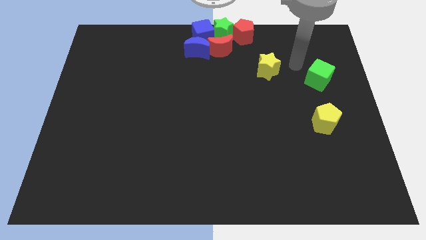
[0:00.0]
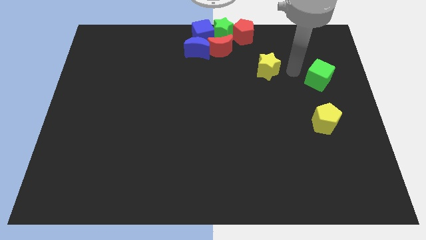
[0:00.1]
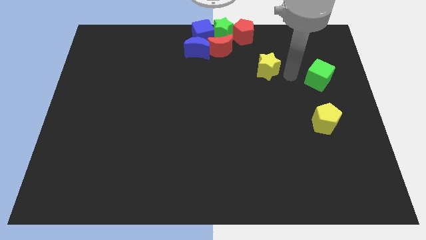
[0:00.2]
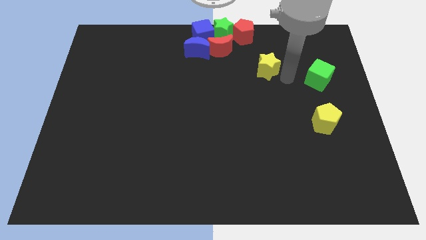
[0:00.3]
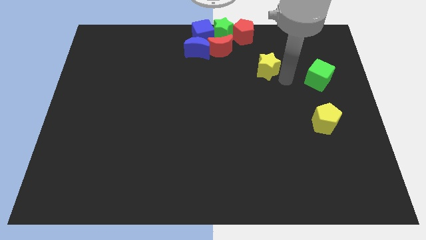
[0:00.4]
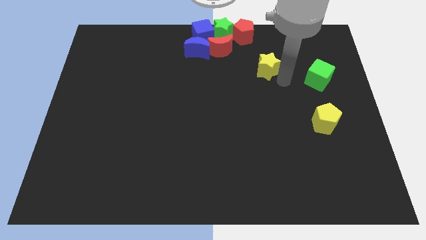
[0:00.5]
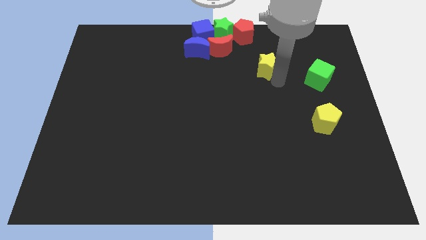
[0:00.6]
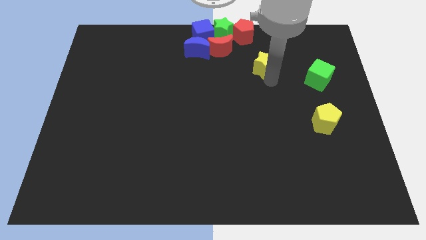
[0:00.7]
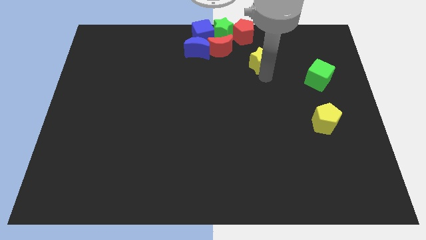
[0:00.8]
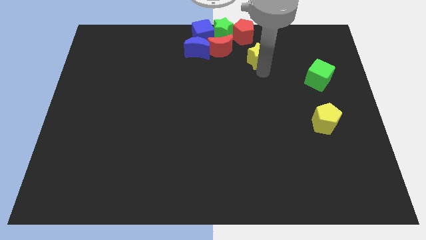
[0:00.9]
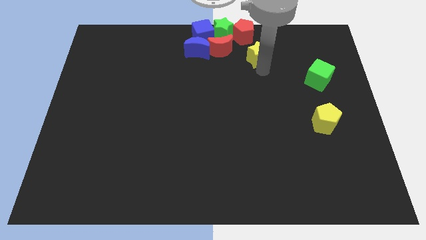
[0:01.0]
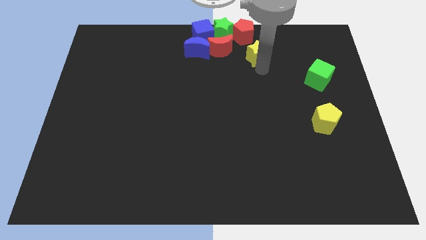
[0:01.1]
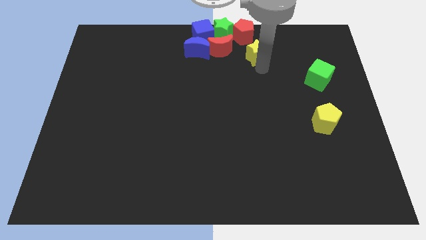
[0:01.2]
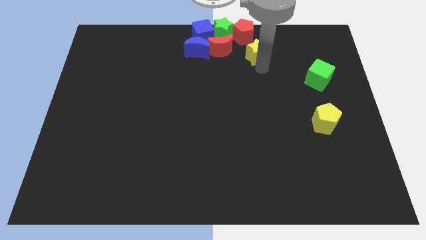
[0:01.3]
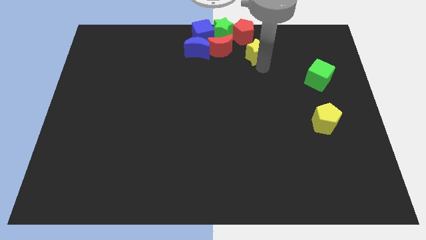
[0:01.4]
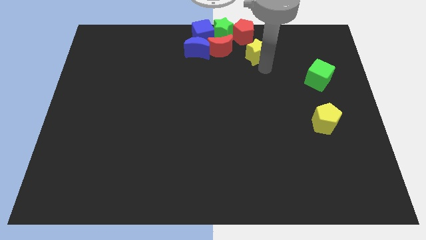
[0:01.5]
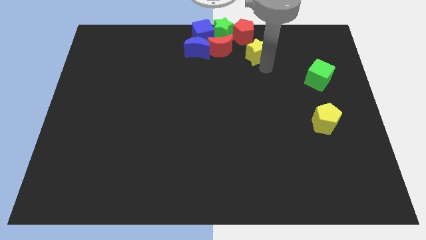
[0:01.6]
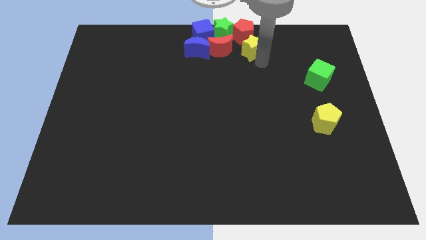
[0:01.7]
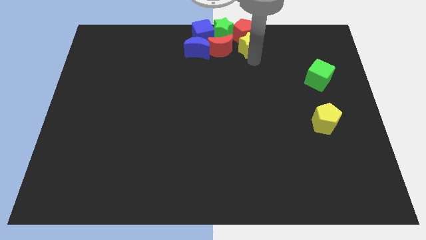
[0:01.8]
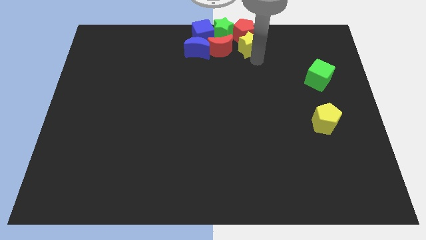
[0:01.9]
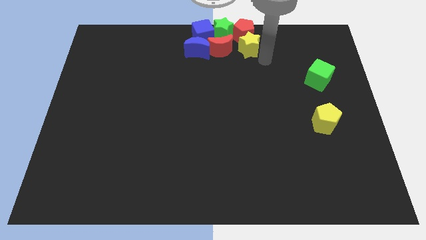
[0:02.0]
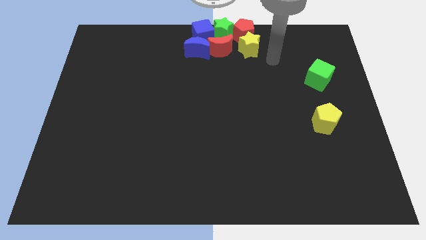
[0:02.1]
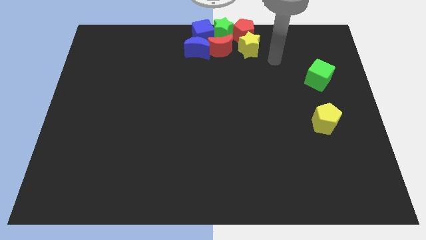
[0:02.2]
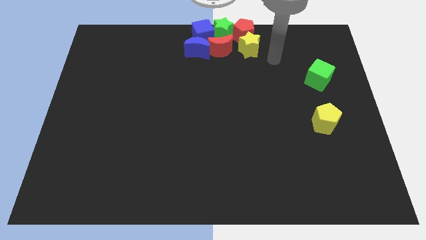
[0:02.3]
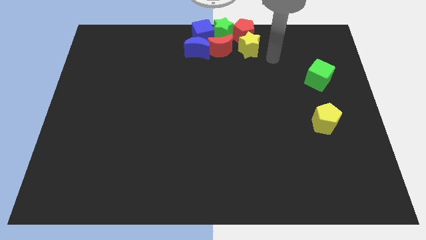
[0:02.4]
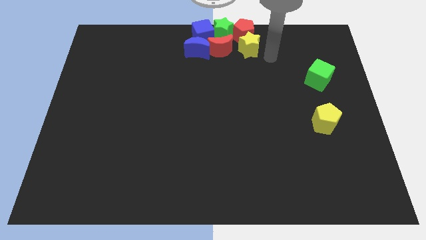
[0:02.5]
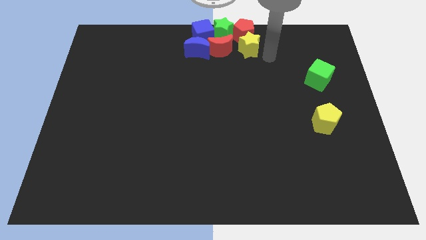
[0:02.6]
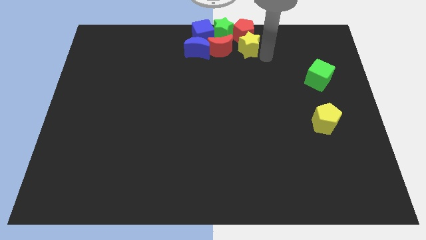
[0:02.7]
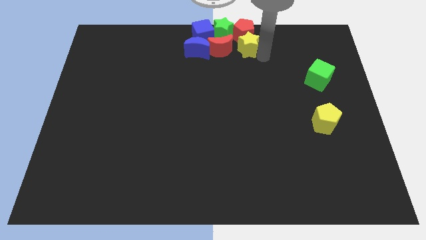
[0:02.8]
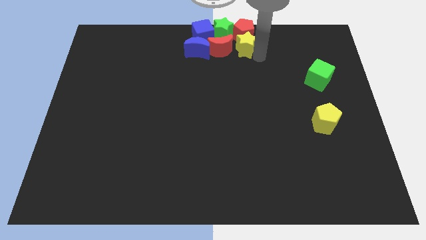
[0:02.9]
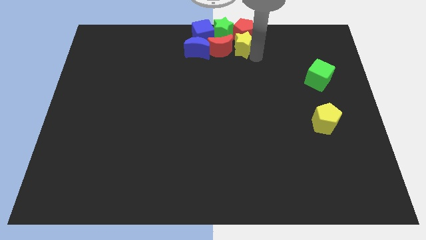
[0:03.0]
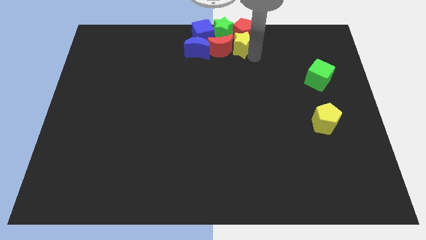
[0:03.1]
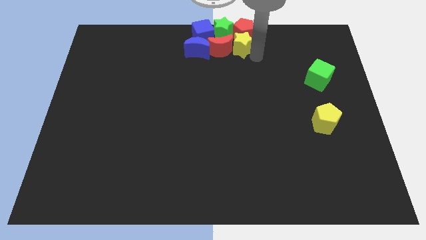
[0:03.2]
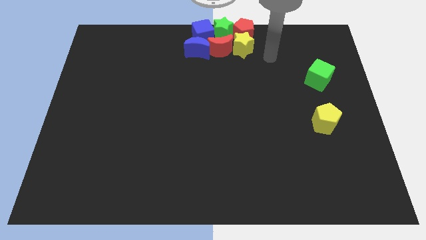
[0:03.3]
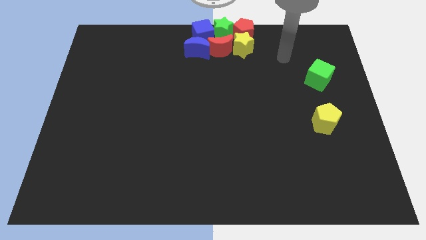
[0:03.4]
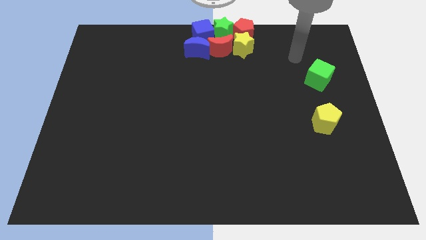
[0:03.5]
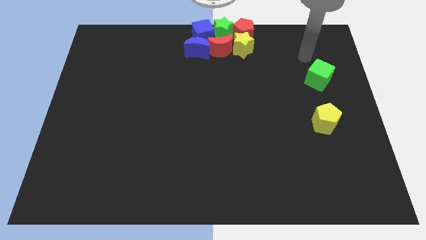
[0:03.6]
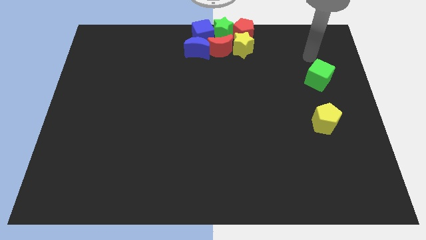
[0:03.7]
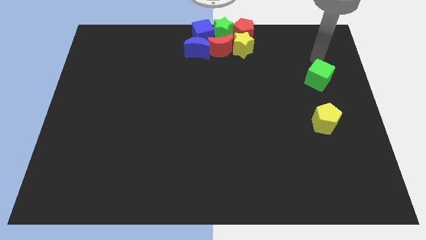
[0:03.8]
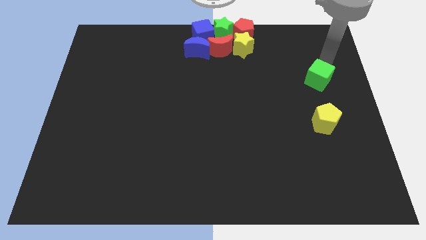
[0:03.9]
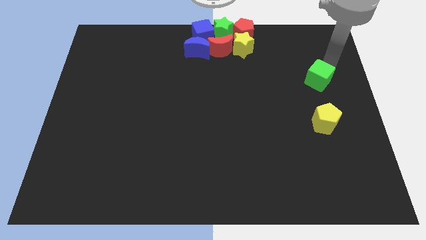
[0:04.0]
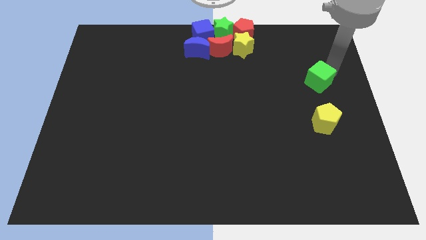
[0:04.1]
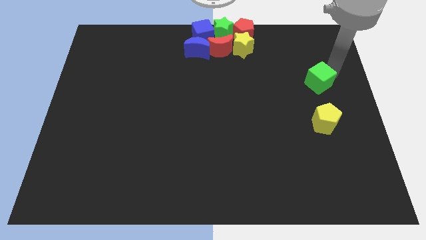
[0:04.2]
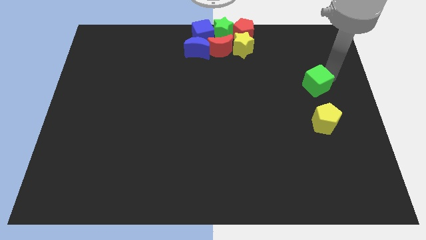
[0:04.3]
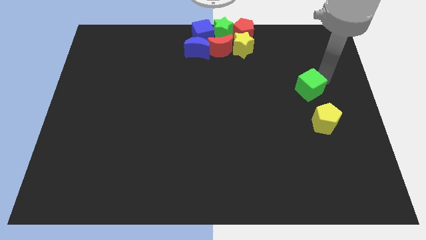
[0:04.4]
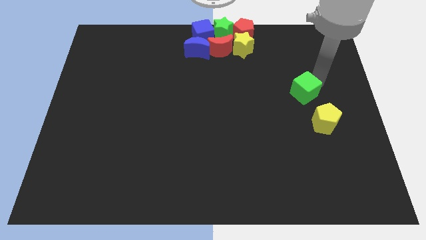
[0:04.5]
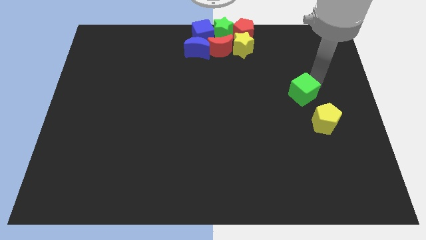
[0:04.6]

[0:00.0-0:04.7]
place the yellow star right to the red crescent to form a horizontal line

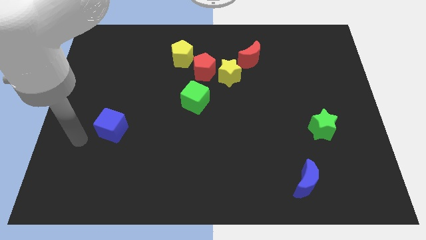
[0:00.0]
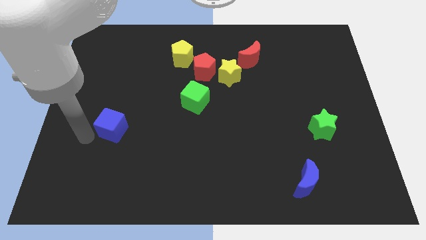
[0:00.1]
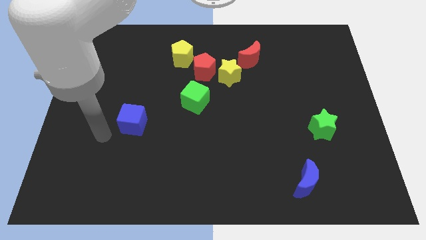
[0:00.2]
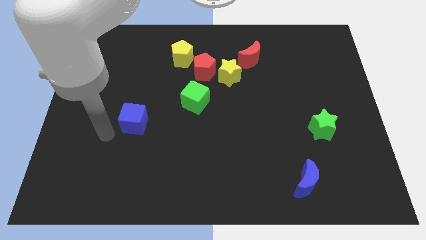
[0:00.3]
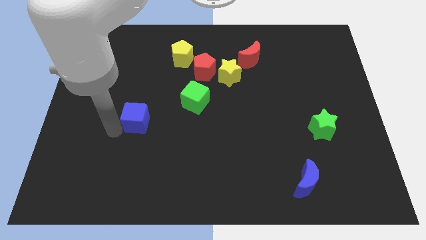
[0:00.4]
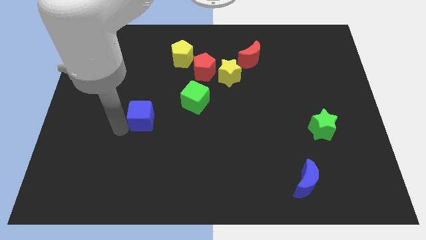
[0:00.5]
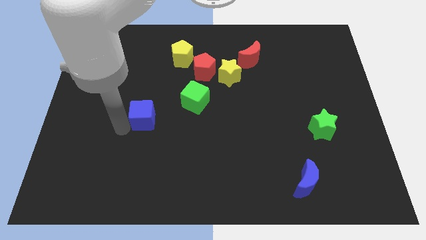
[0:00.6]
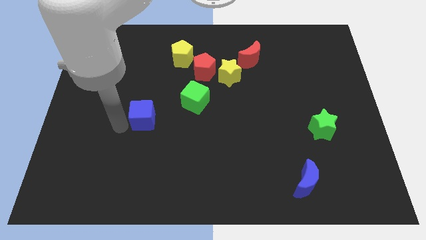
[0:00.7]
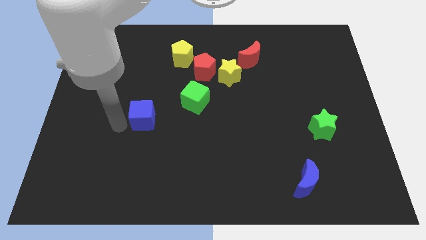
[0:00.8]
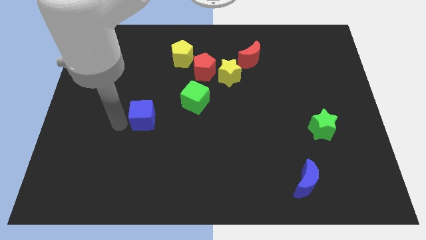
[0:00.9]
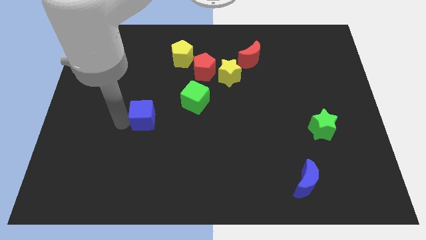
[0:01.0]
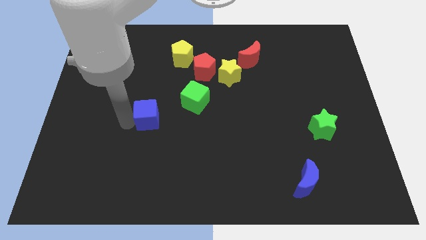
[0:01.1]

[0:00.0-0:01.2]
push the blue cube towards the green cube

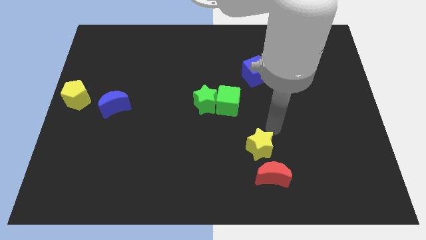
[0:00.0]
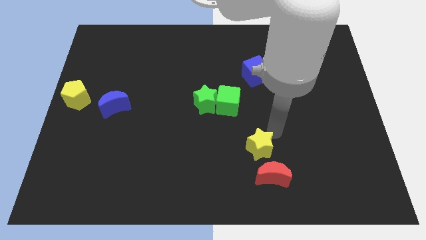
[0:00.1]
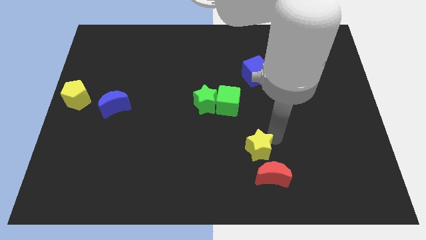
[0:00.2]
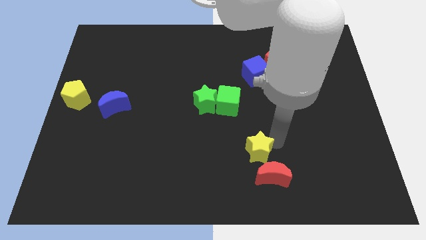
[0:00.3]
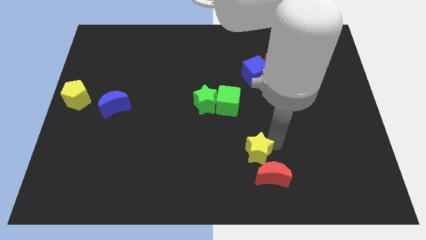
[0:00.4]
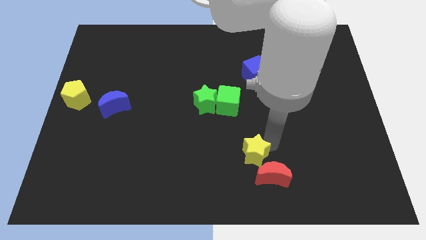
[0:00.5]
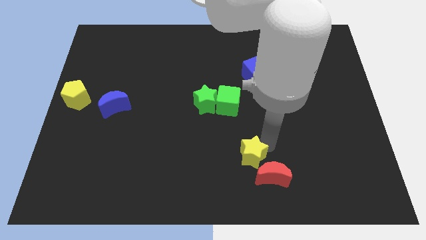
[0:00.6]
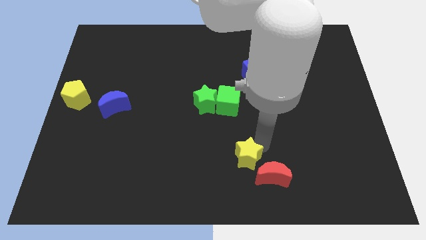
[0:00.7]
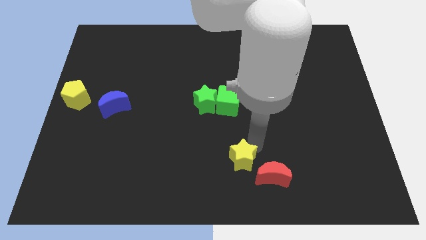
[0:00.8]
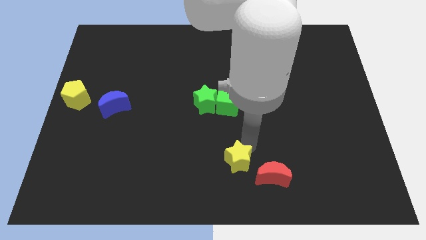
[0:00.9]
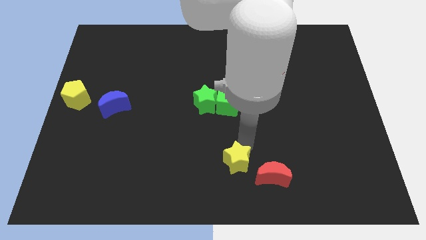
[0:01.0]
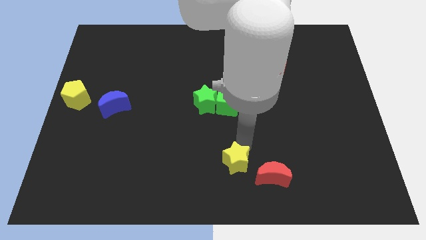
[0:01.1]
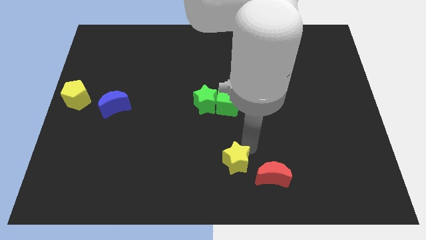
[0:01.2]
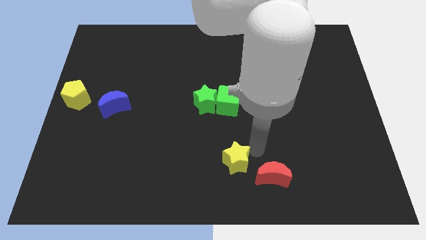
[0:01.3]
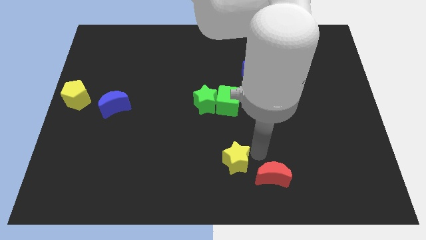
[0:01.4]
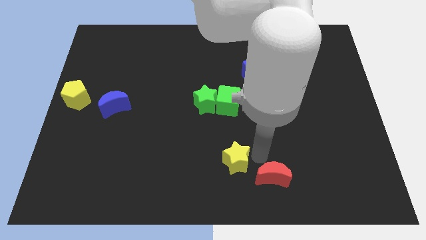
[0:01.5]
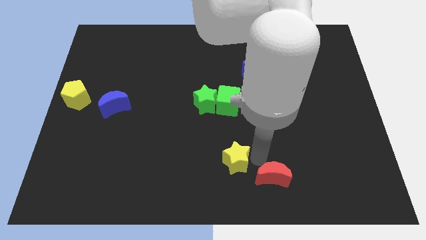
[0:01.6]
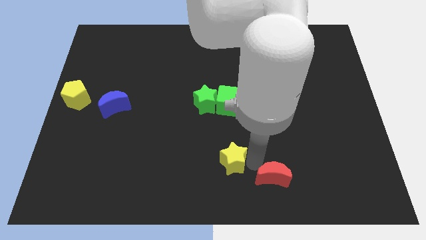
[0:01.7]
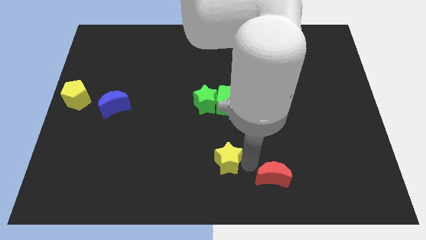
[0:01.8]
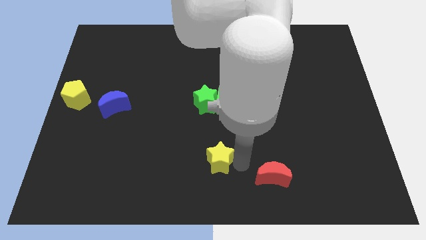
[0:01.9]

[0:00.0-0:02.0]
move the yellow star below the green blocks

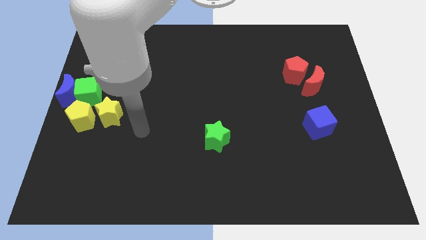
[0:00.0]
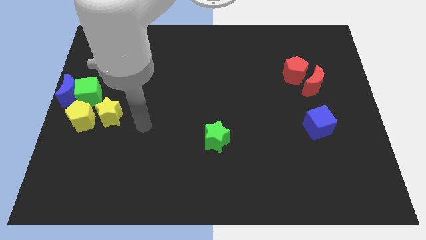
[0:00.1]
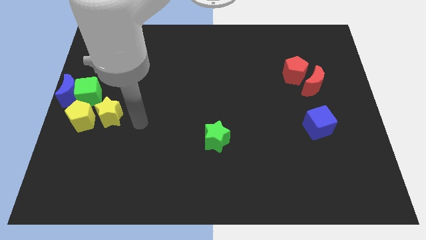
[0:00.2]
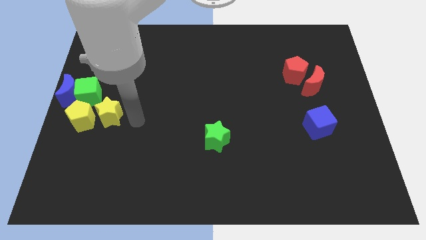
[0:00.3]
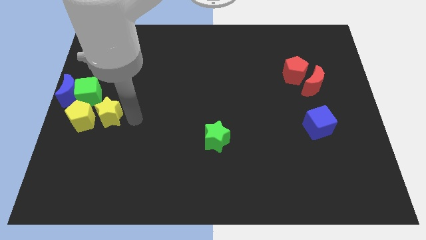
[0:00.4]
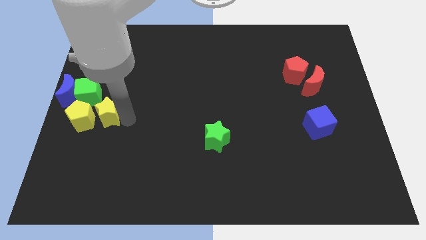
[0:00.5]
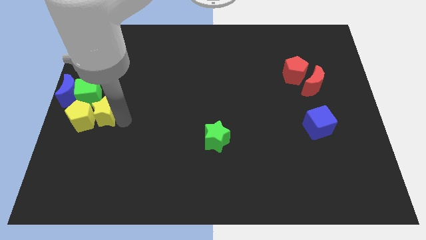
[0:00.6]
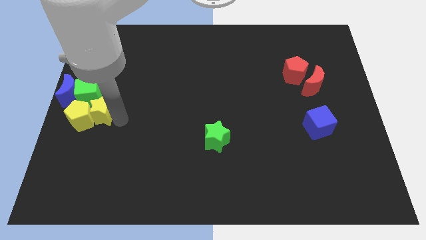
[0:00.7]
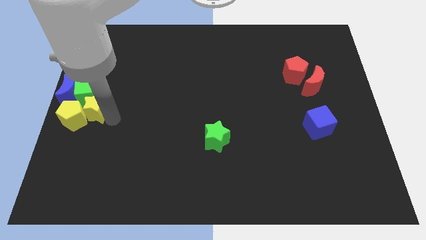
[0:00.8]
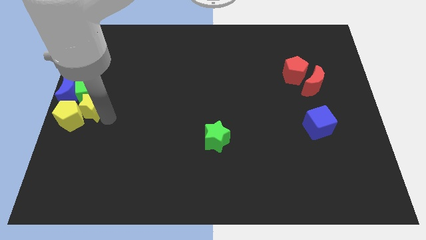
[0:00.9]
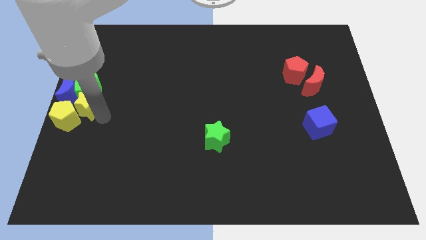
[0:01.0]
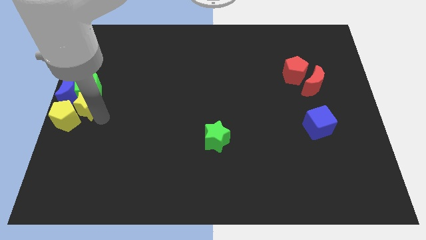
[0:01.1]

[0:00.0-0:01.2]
move the yellow star into the yellow pentagon
